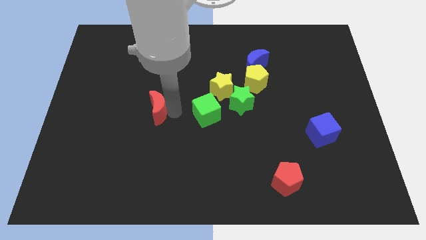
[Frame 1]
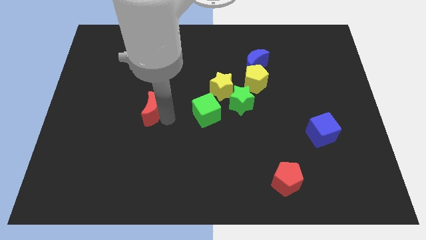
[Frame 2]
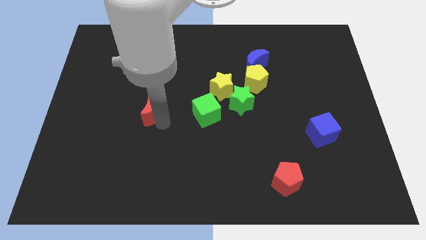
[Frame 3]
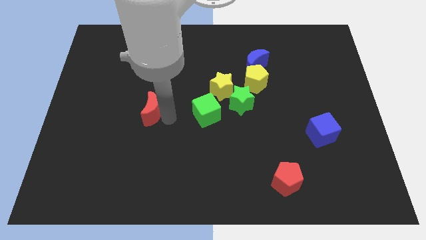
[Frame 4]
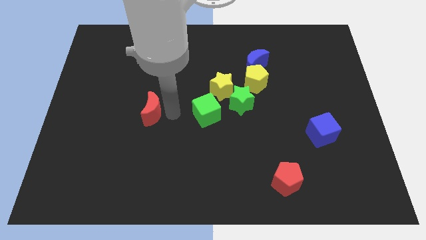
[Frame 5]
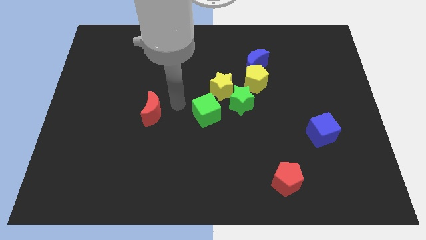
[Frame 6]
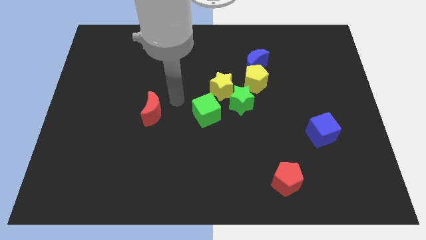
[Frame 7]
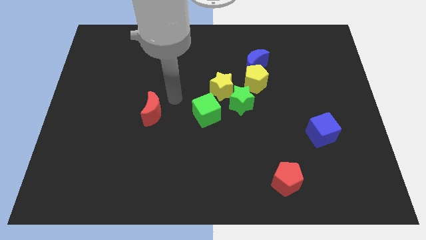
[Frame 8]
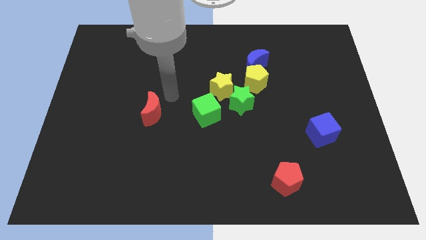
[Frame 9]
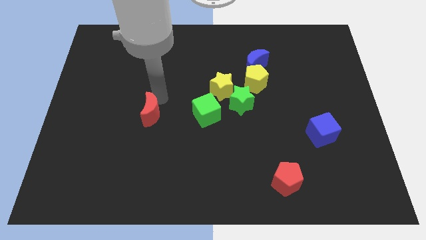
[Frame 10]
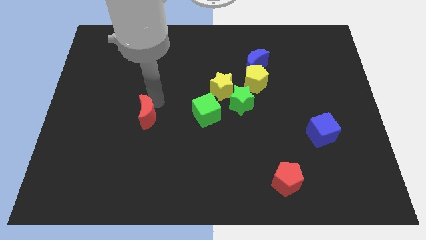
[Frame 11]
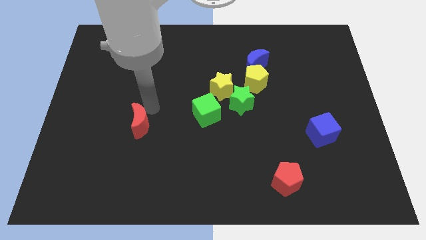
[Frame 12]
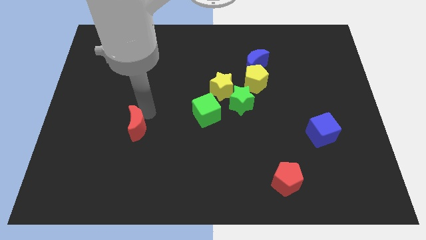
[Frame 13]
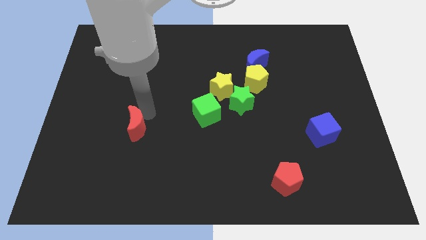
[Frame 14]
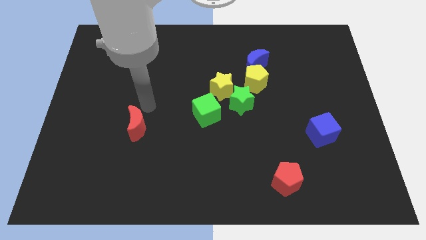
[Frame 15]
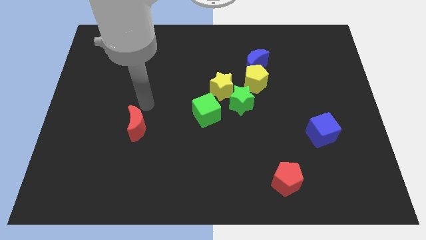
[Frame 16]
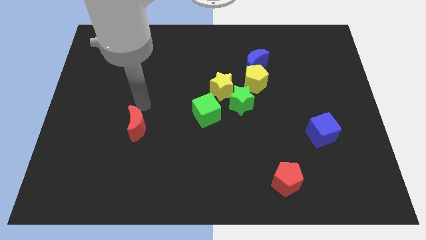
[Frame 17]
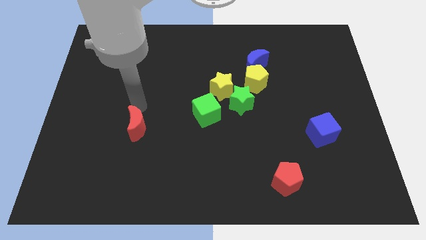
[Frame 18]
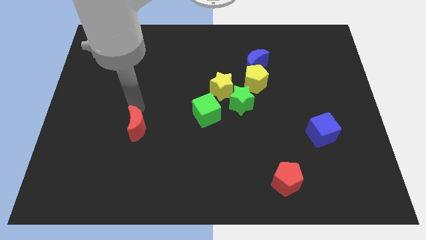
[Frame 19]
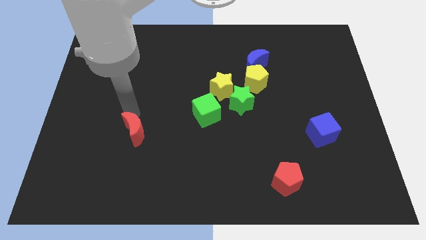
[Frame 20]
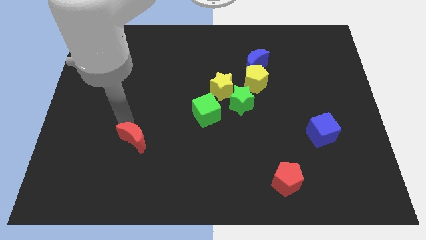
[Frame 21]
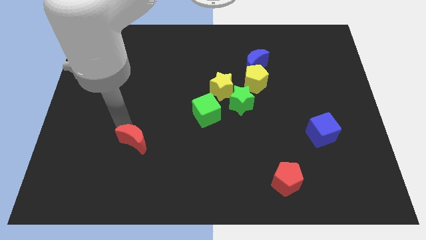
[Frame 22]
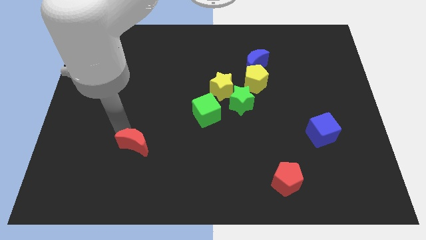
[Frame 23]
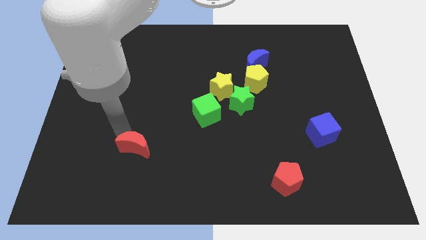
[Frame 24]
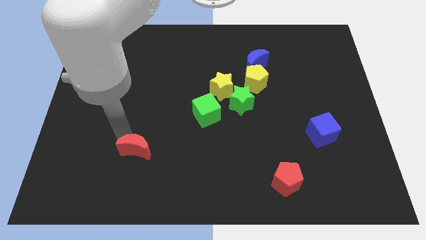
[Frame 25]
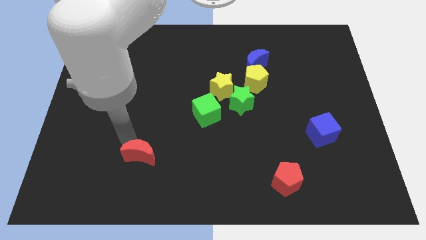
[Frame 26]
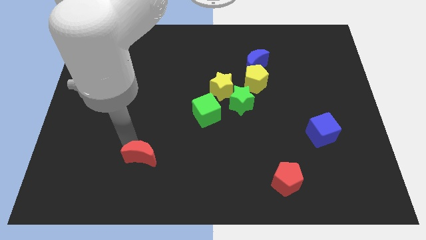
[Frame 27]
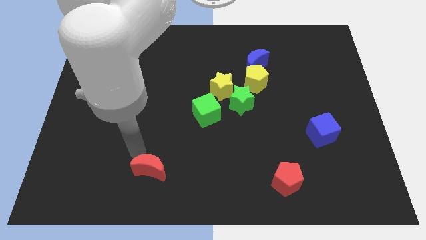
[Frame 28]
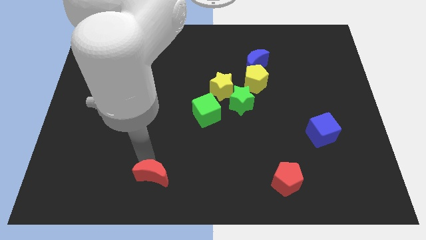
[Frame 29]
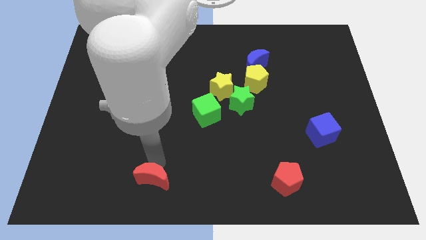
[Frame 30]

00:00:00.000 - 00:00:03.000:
push the red moon towards the down

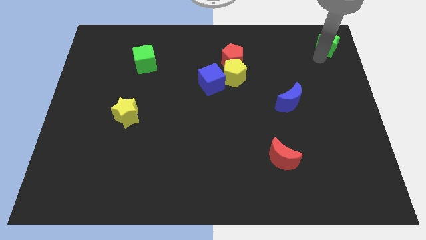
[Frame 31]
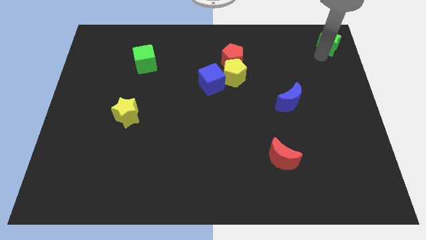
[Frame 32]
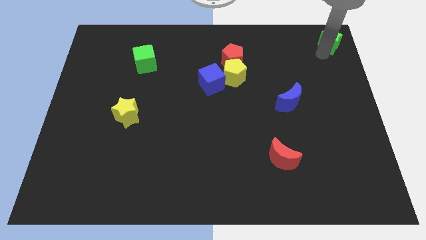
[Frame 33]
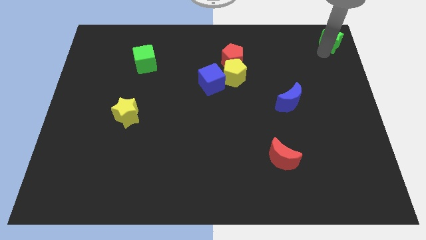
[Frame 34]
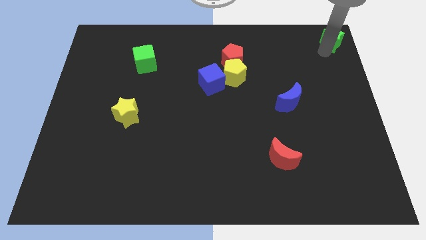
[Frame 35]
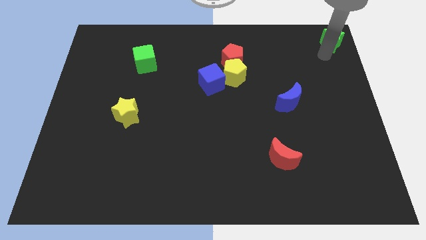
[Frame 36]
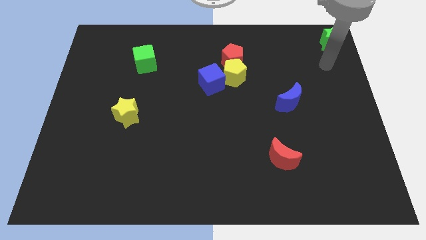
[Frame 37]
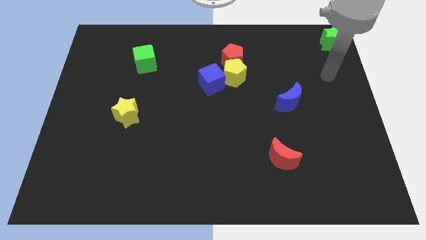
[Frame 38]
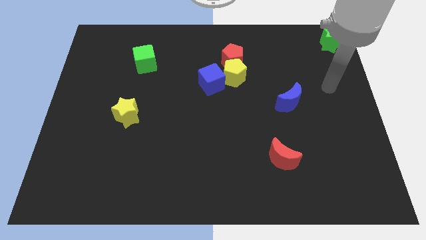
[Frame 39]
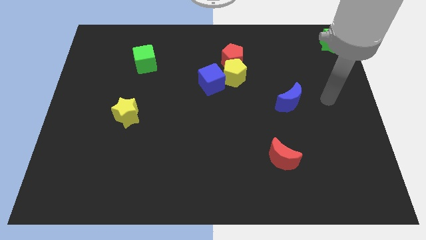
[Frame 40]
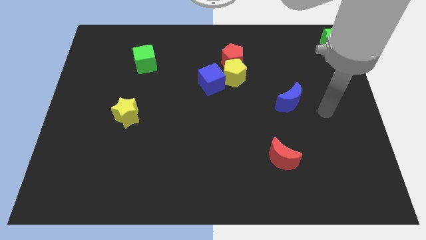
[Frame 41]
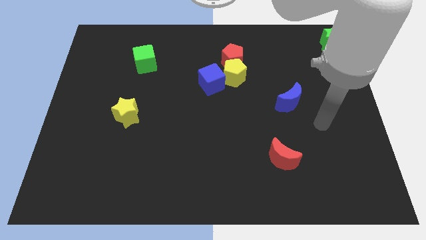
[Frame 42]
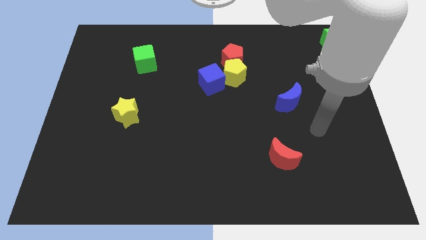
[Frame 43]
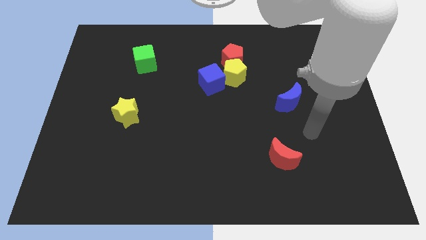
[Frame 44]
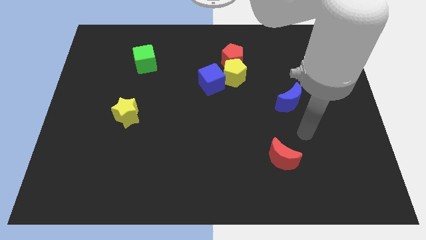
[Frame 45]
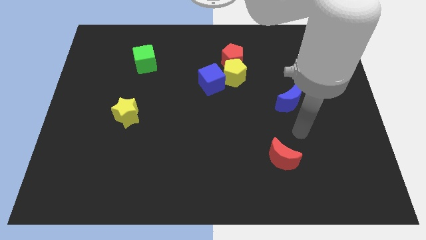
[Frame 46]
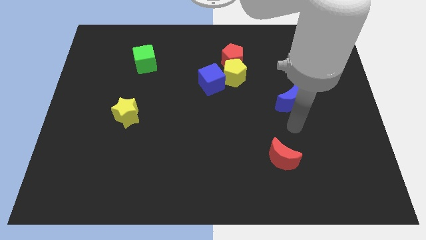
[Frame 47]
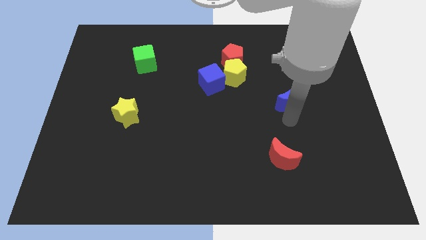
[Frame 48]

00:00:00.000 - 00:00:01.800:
place the arm below the blue moon

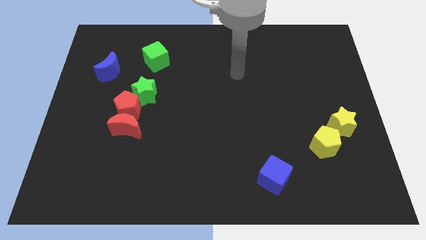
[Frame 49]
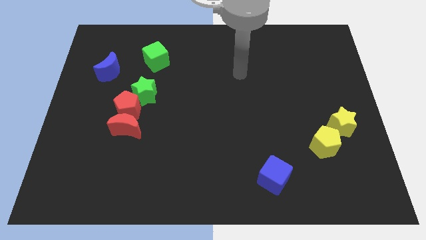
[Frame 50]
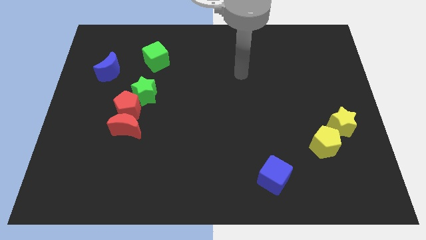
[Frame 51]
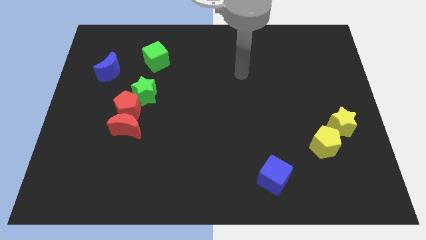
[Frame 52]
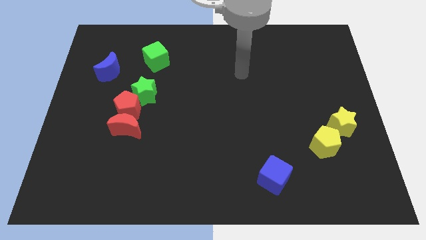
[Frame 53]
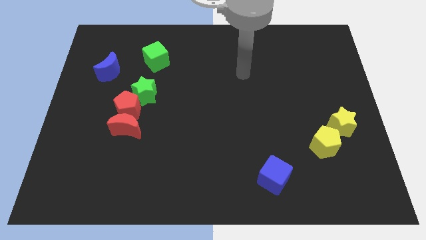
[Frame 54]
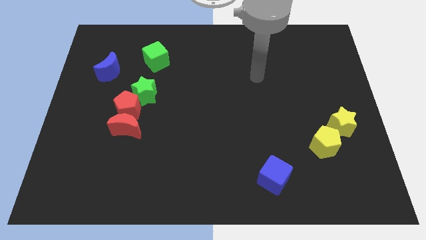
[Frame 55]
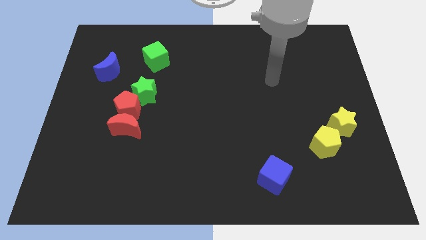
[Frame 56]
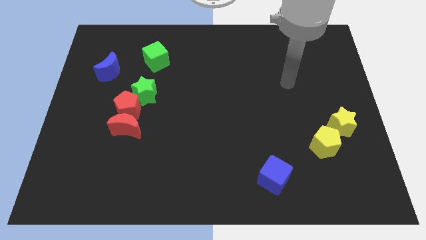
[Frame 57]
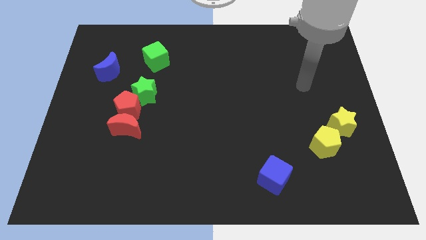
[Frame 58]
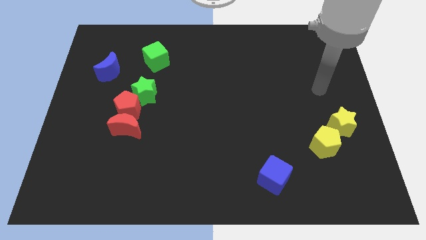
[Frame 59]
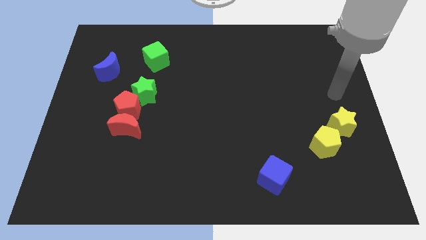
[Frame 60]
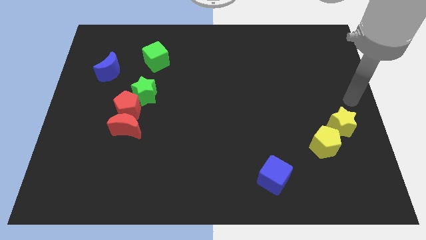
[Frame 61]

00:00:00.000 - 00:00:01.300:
point the arm above the yellow star

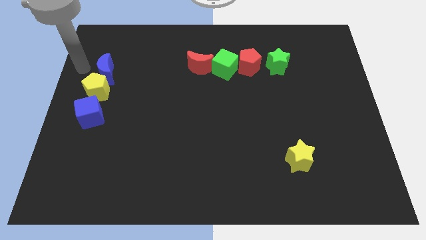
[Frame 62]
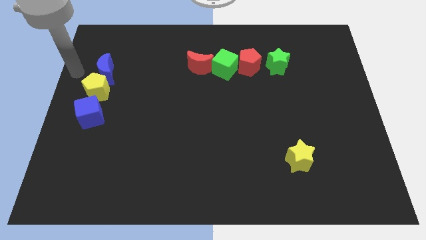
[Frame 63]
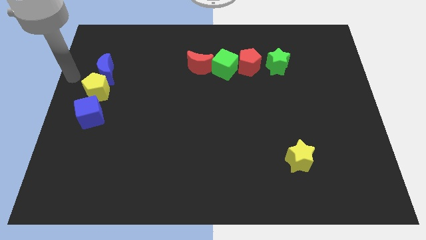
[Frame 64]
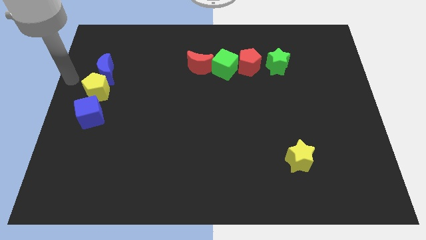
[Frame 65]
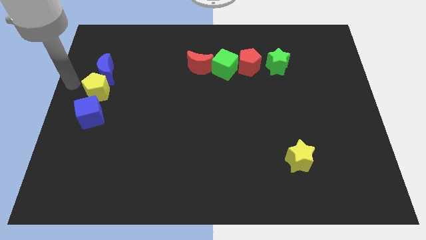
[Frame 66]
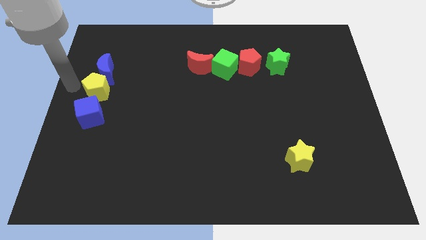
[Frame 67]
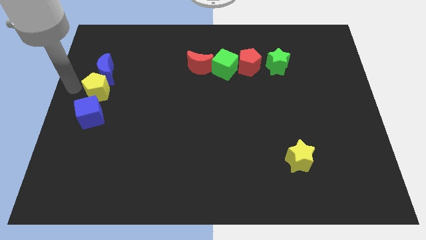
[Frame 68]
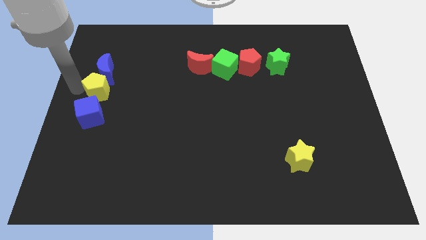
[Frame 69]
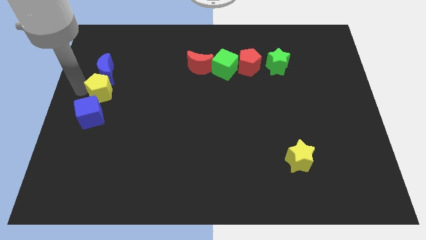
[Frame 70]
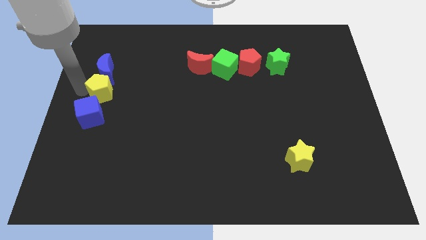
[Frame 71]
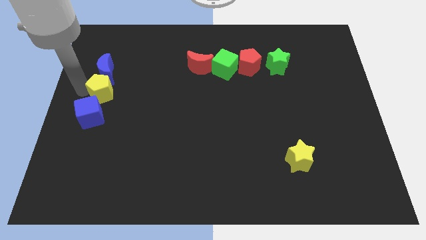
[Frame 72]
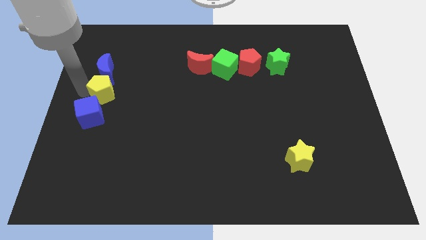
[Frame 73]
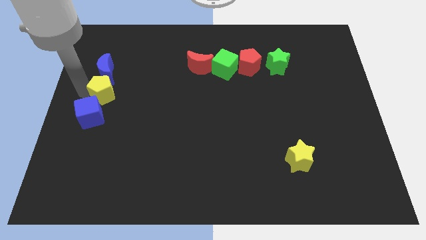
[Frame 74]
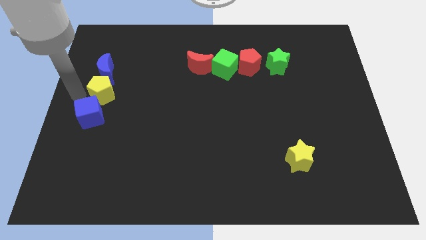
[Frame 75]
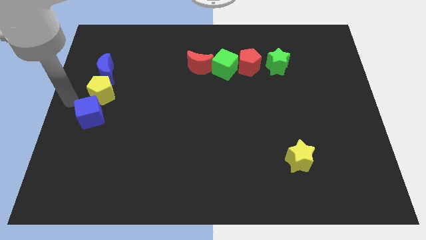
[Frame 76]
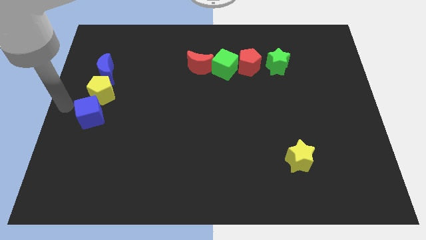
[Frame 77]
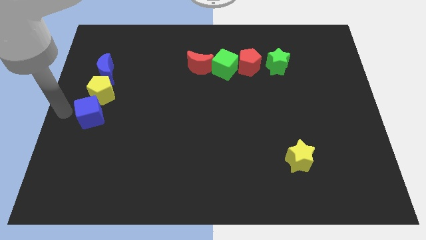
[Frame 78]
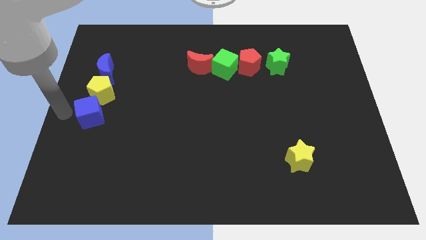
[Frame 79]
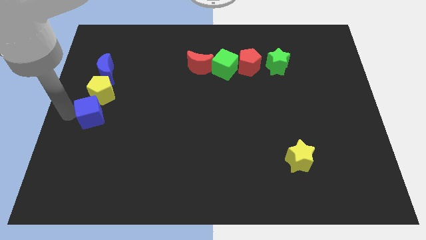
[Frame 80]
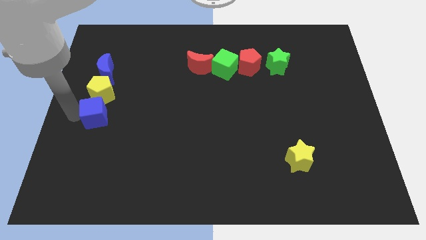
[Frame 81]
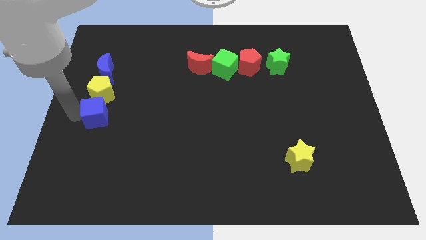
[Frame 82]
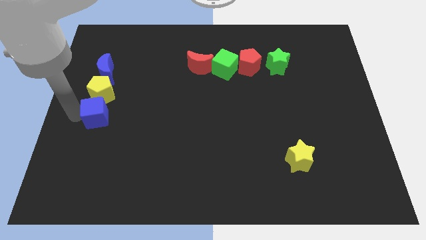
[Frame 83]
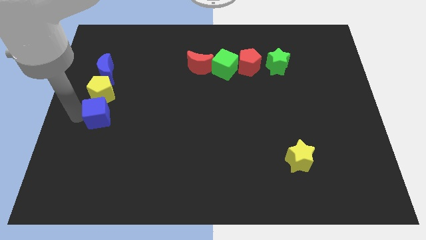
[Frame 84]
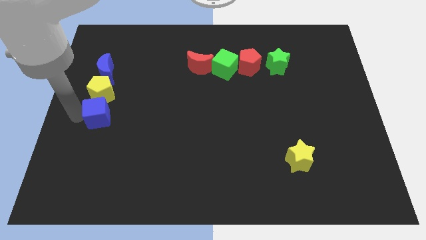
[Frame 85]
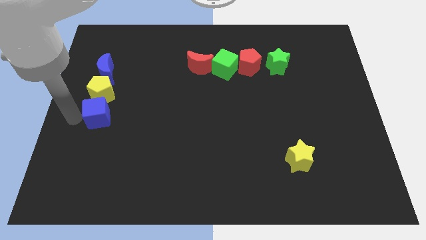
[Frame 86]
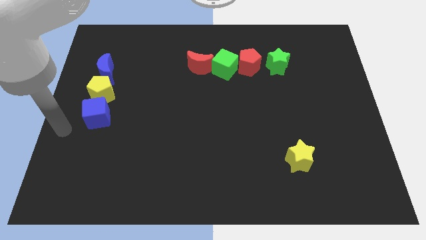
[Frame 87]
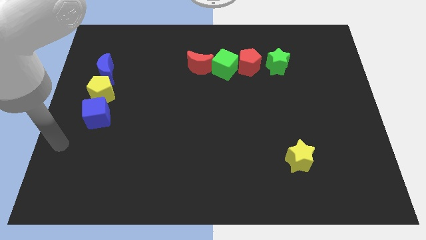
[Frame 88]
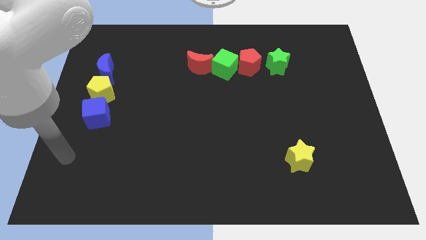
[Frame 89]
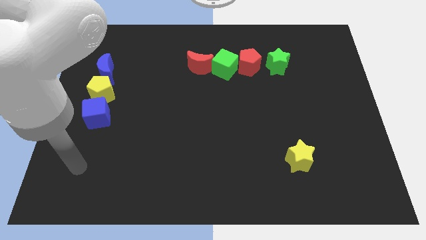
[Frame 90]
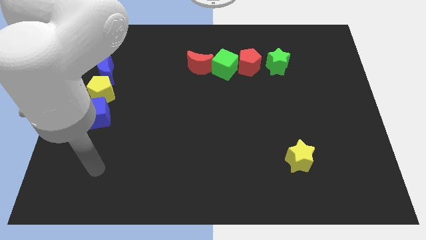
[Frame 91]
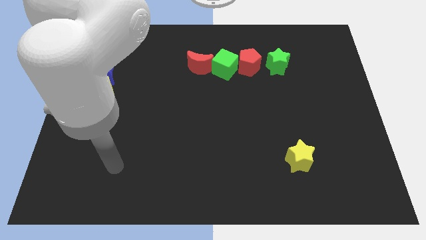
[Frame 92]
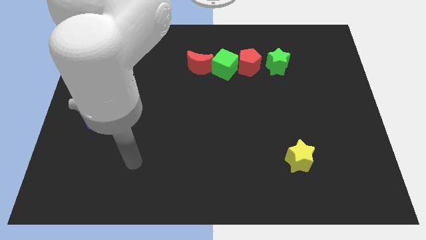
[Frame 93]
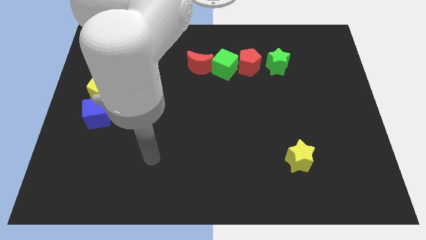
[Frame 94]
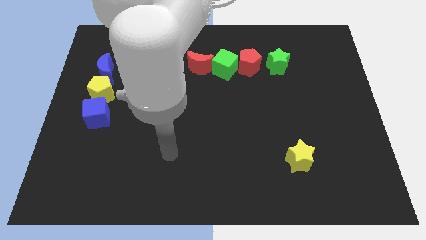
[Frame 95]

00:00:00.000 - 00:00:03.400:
move the blue cube slightly right
